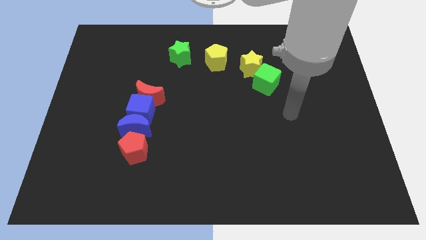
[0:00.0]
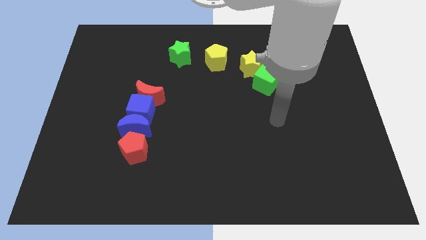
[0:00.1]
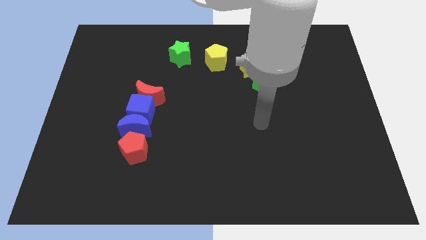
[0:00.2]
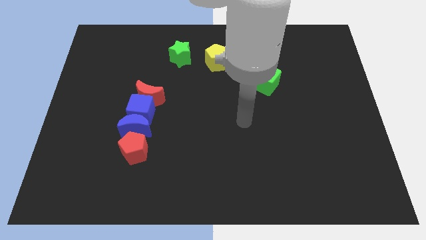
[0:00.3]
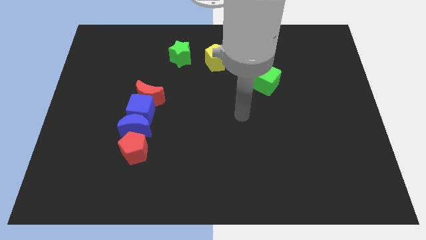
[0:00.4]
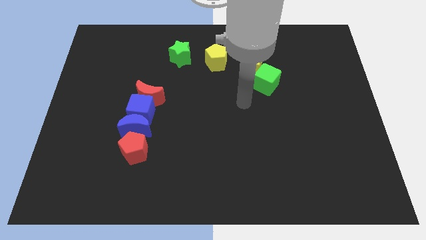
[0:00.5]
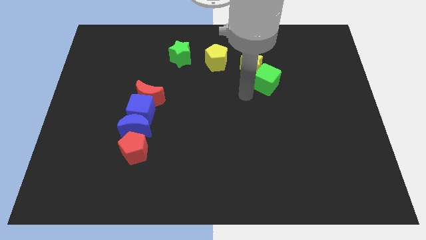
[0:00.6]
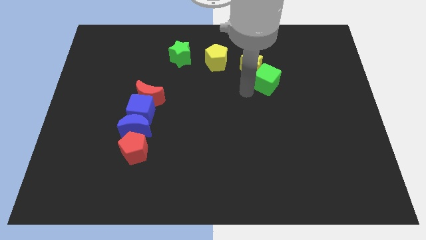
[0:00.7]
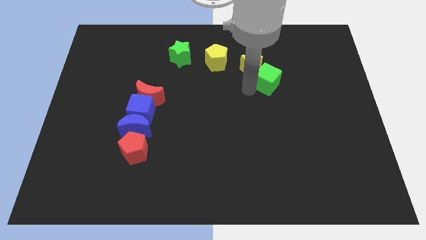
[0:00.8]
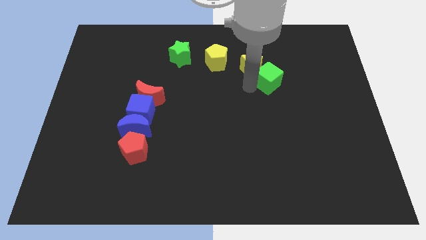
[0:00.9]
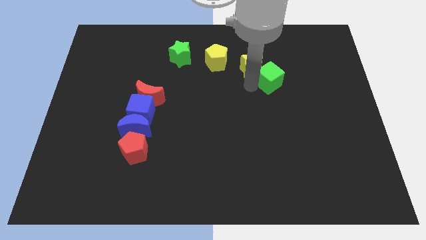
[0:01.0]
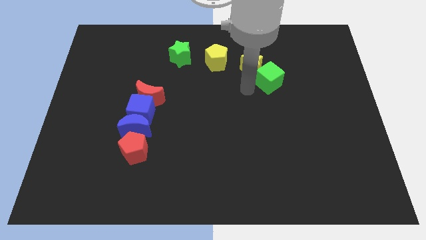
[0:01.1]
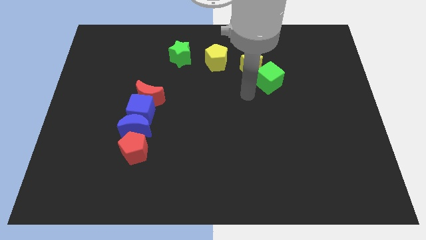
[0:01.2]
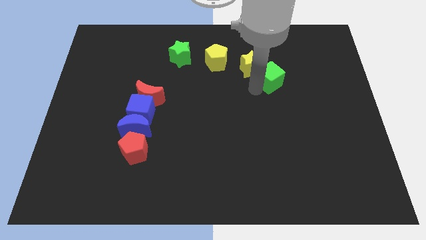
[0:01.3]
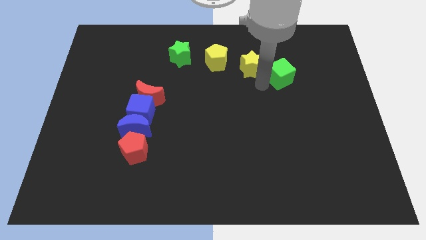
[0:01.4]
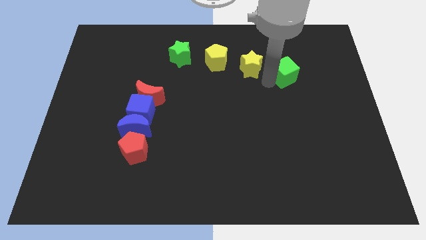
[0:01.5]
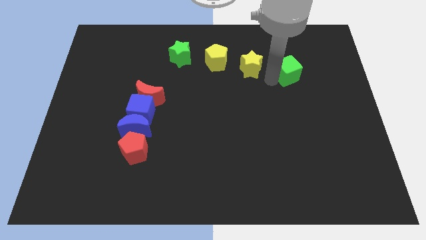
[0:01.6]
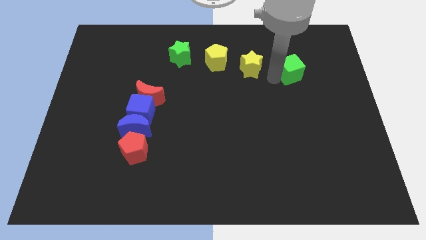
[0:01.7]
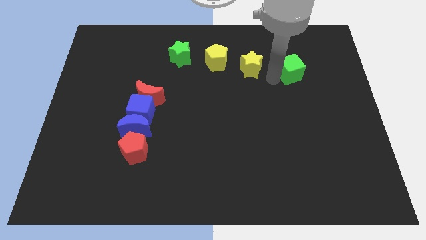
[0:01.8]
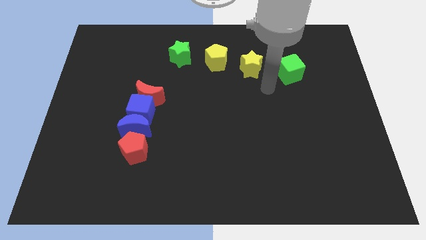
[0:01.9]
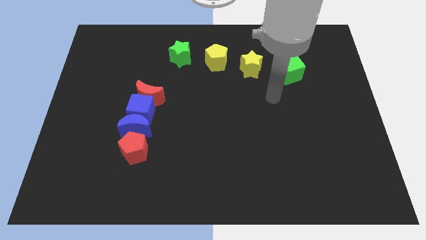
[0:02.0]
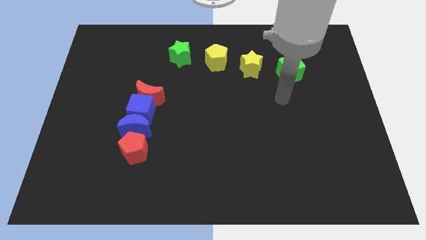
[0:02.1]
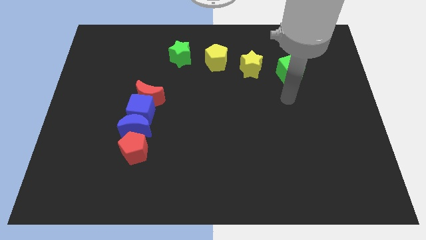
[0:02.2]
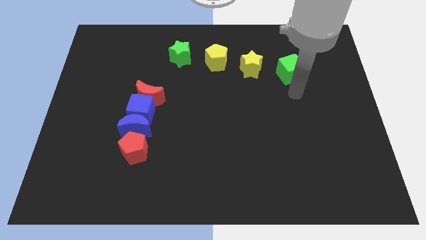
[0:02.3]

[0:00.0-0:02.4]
move the green cube parallel to the left of the yellow star

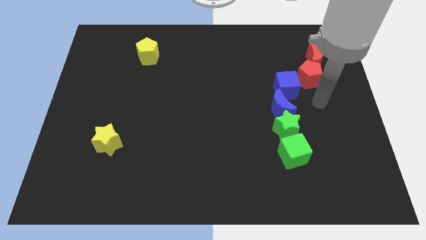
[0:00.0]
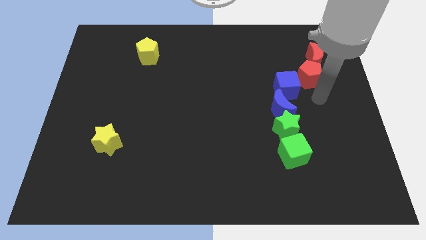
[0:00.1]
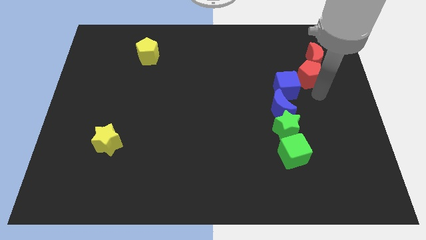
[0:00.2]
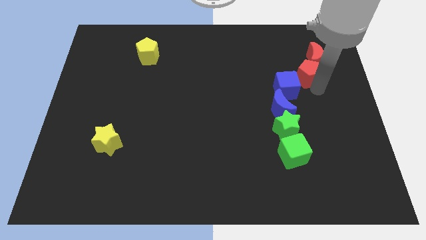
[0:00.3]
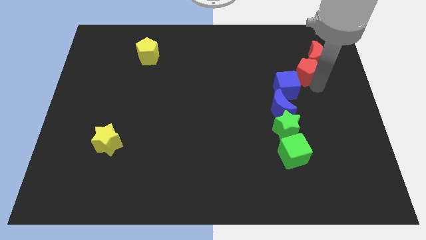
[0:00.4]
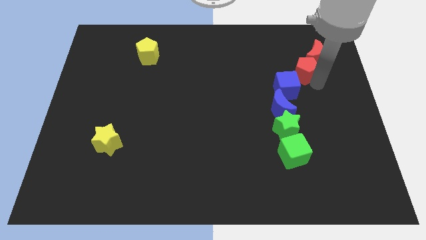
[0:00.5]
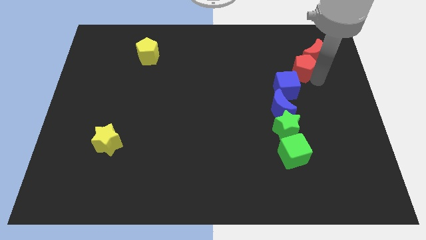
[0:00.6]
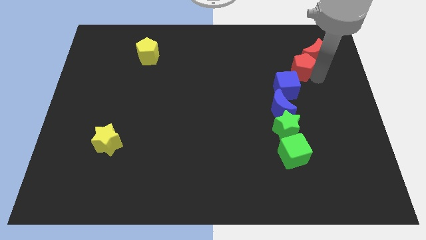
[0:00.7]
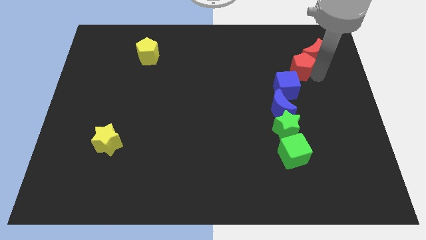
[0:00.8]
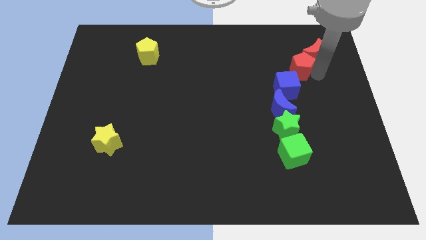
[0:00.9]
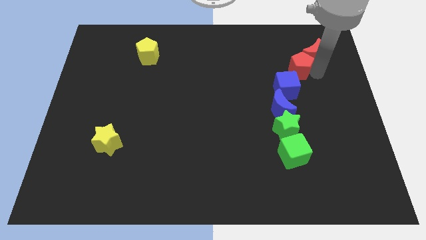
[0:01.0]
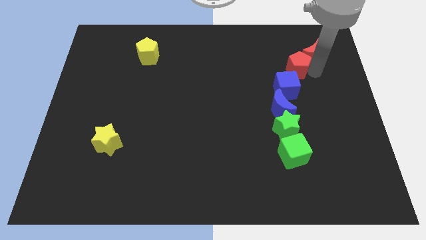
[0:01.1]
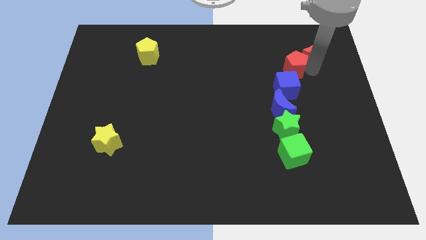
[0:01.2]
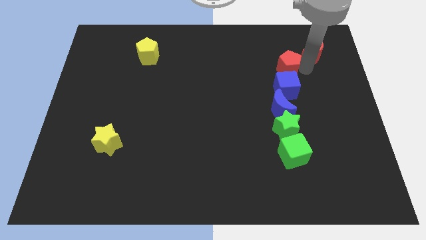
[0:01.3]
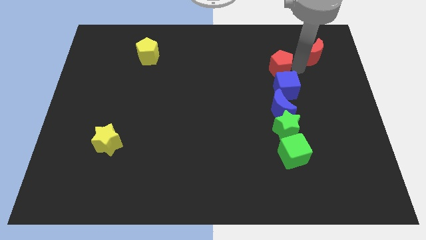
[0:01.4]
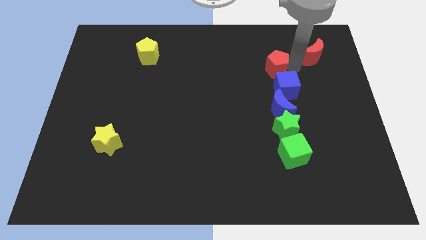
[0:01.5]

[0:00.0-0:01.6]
push the red pentagon along with the red crescent on top of the blue cube

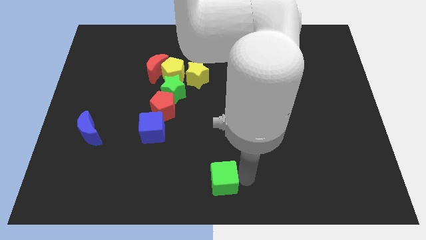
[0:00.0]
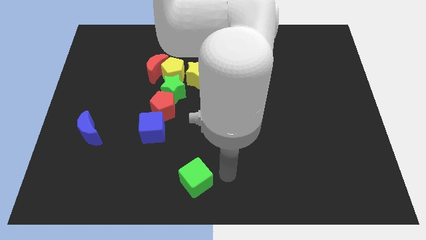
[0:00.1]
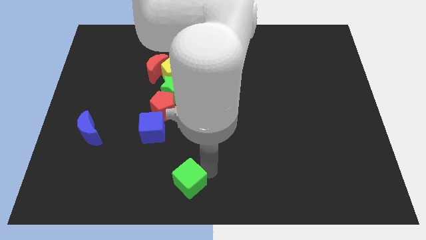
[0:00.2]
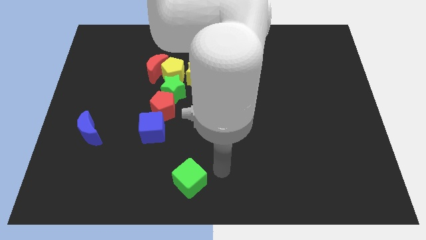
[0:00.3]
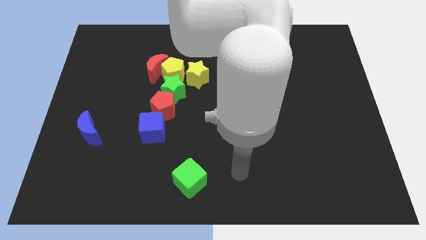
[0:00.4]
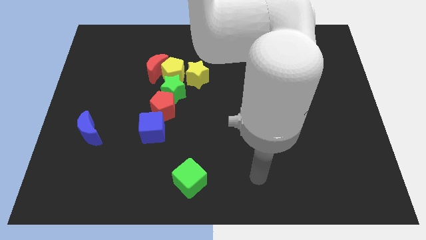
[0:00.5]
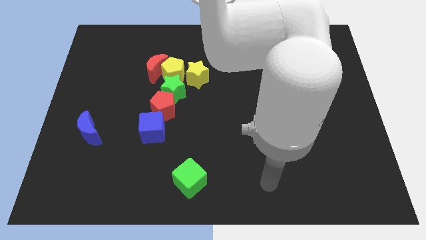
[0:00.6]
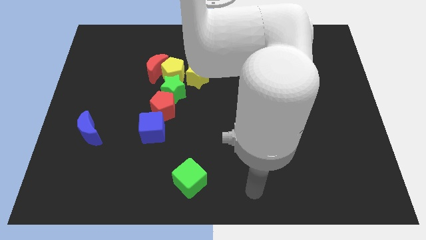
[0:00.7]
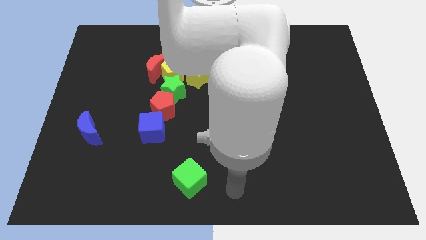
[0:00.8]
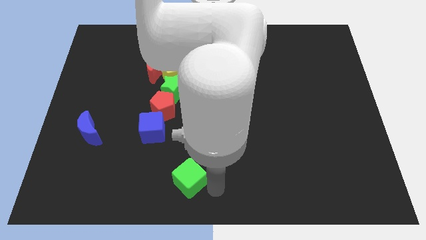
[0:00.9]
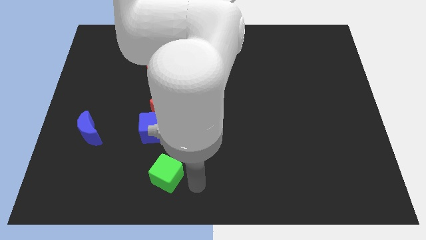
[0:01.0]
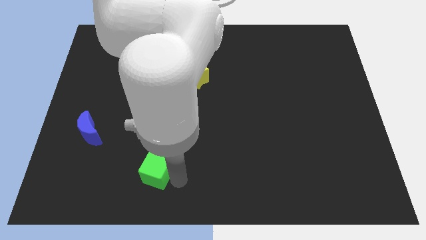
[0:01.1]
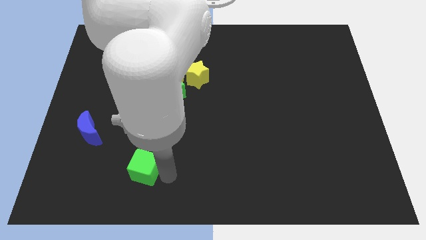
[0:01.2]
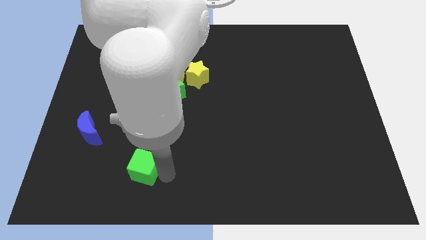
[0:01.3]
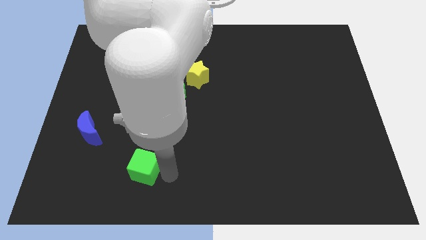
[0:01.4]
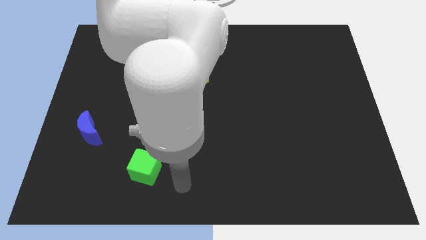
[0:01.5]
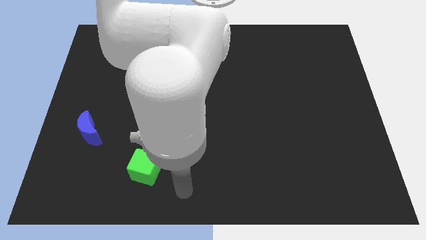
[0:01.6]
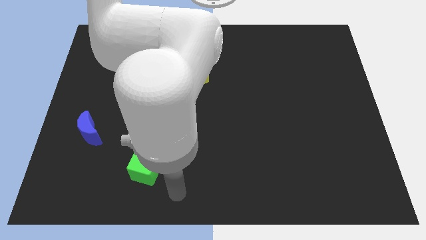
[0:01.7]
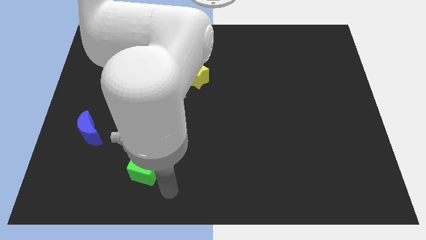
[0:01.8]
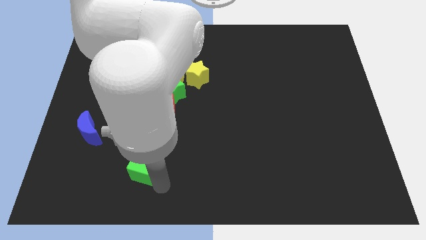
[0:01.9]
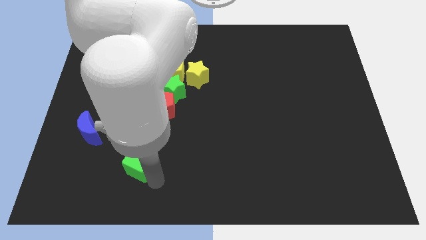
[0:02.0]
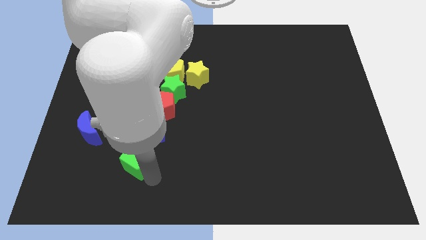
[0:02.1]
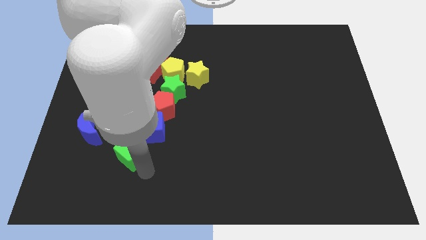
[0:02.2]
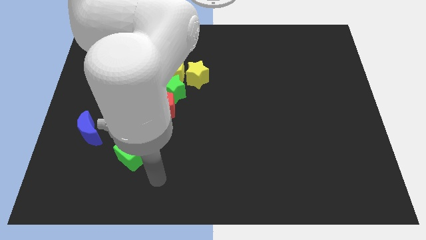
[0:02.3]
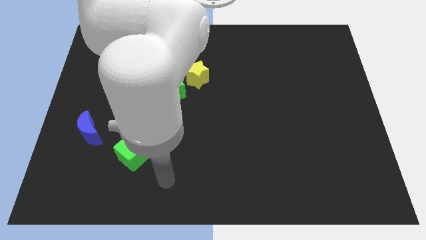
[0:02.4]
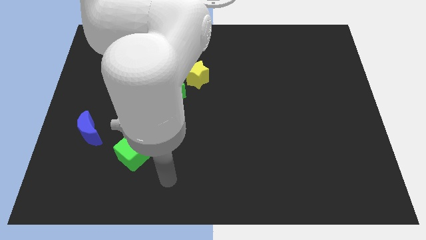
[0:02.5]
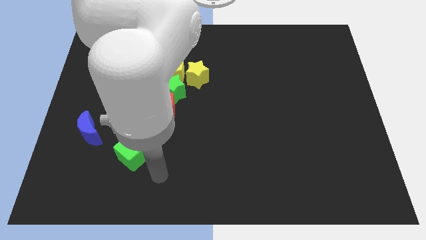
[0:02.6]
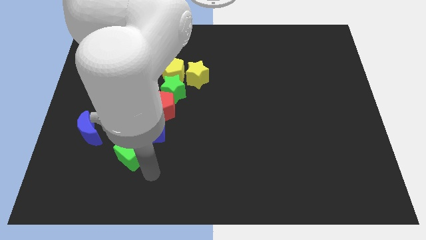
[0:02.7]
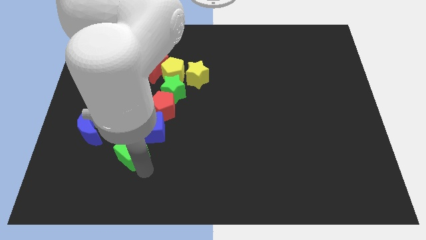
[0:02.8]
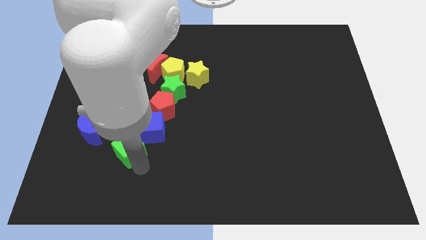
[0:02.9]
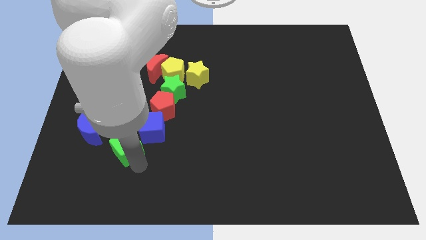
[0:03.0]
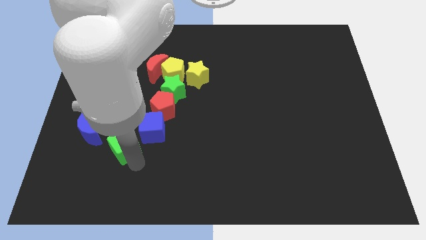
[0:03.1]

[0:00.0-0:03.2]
push the green cube to the bottom left to the blue cube

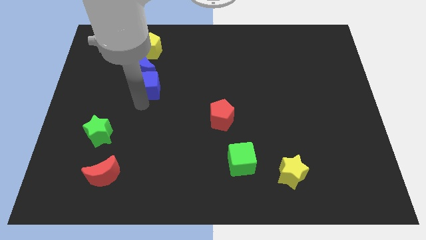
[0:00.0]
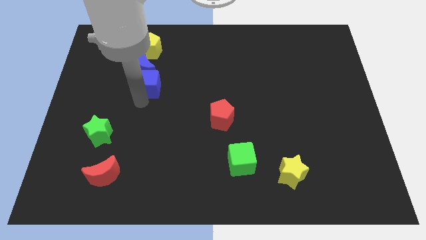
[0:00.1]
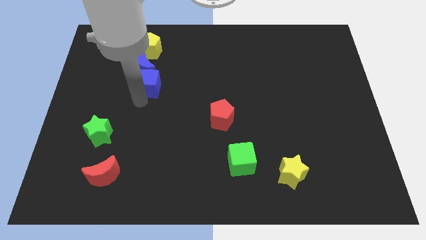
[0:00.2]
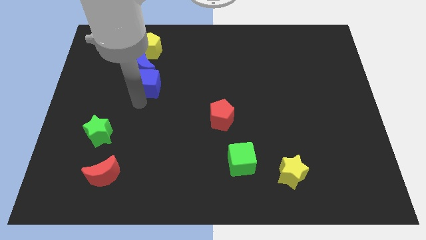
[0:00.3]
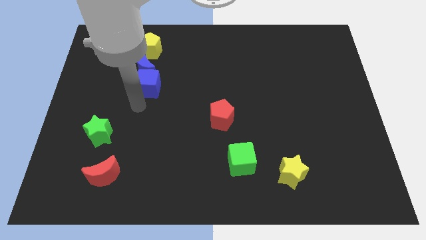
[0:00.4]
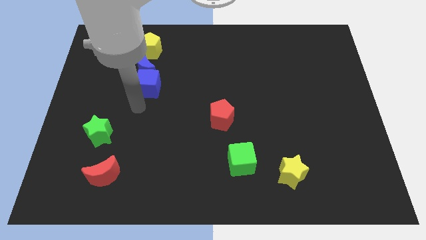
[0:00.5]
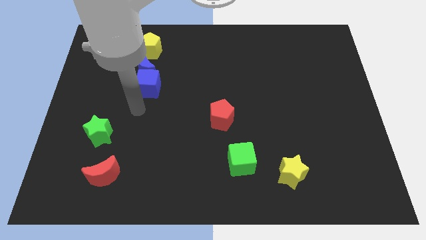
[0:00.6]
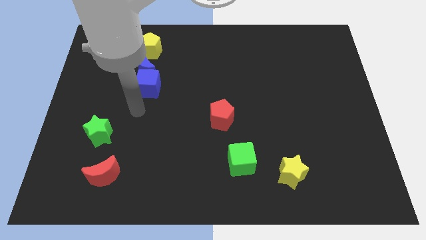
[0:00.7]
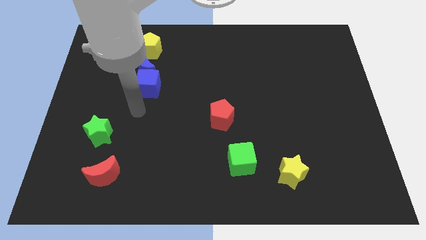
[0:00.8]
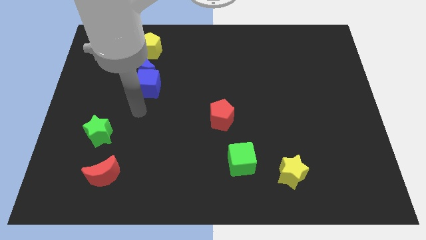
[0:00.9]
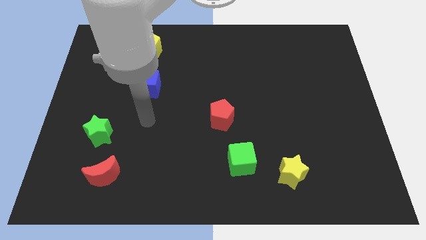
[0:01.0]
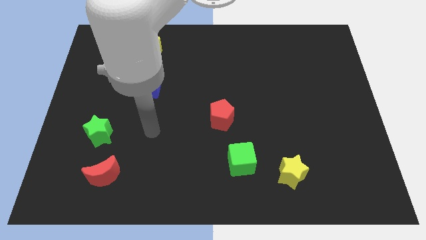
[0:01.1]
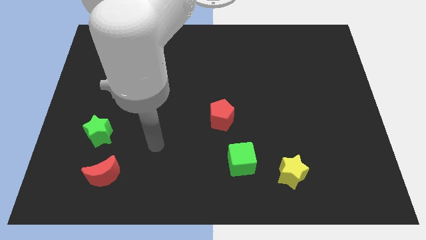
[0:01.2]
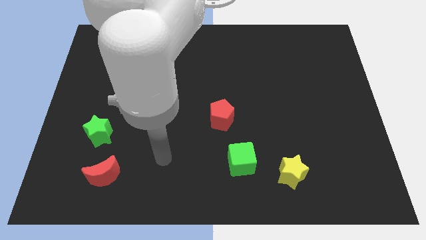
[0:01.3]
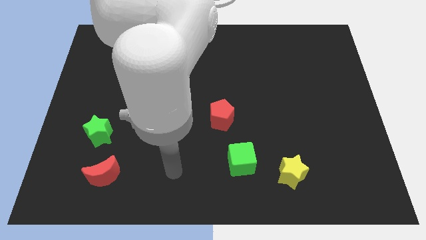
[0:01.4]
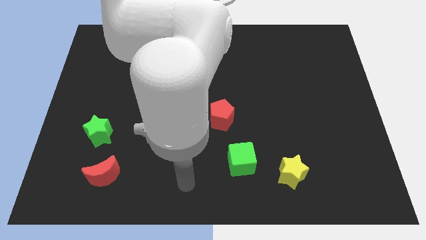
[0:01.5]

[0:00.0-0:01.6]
move the arm away from the blue cube

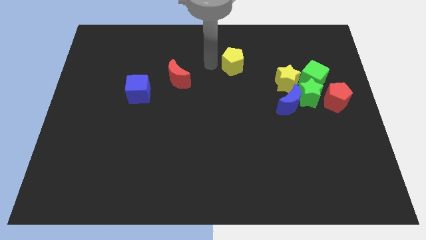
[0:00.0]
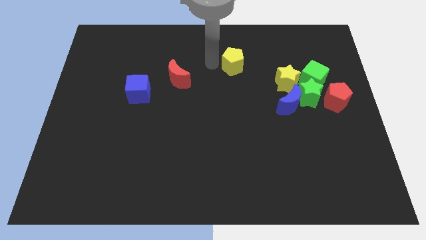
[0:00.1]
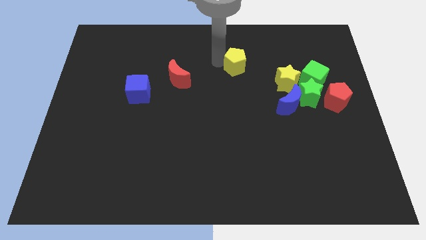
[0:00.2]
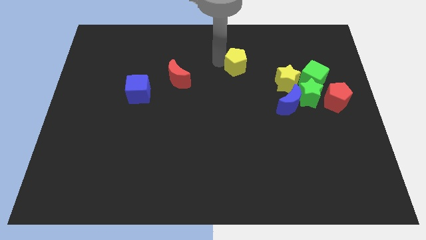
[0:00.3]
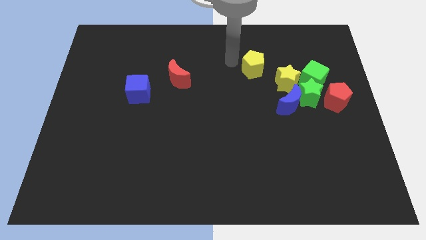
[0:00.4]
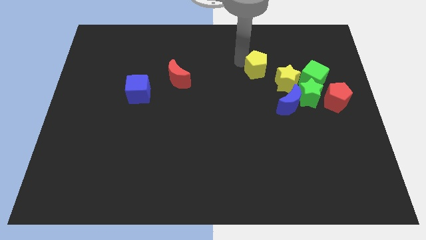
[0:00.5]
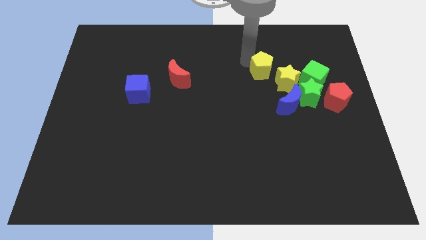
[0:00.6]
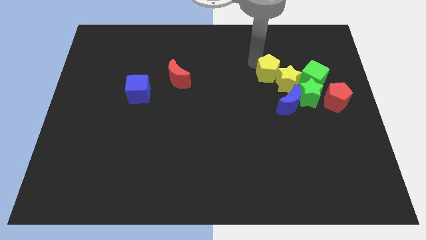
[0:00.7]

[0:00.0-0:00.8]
move the yellow pentagon to the top right side of yellow star
